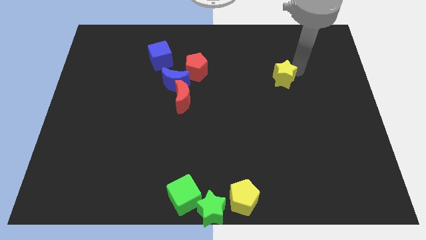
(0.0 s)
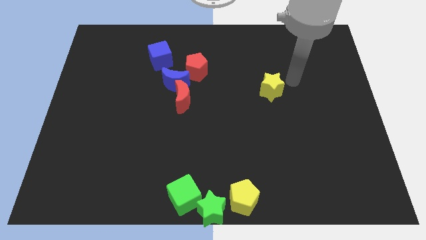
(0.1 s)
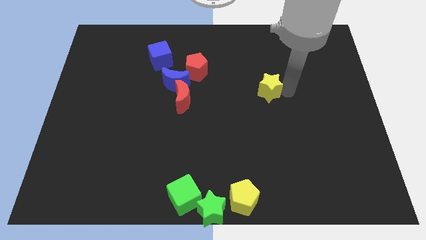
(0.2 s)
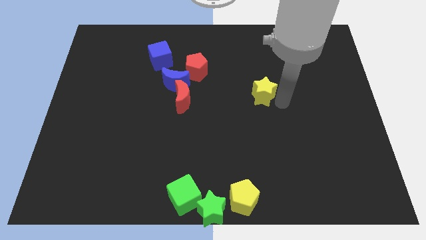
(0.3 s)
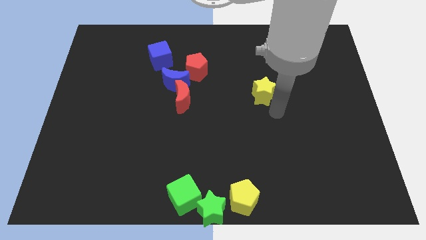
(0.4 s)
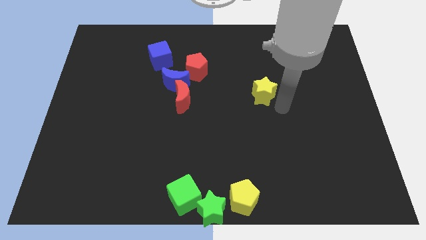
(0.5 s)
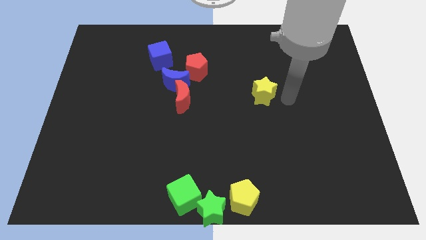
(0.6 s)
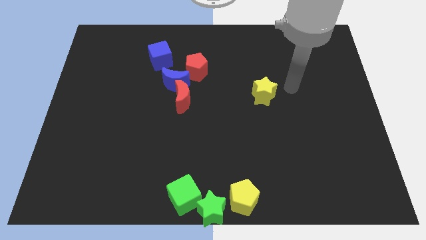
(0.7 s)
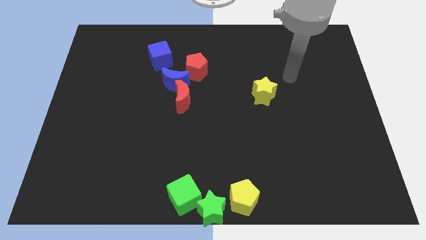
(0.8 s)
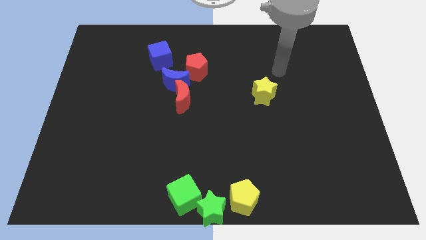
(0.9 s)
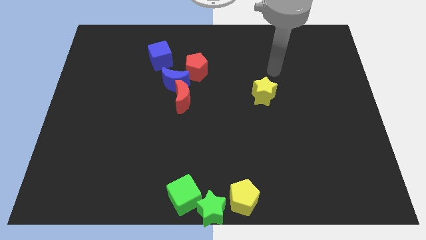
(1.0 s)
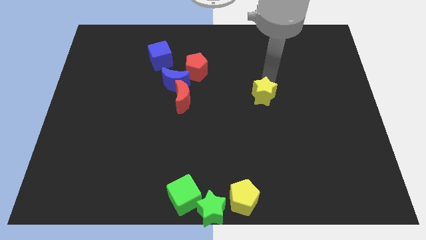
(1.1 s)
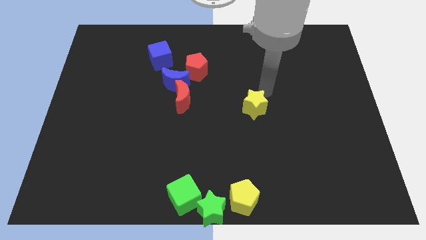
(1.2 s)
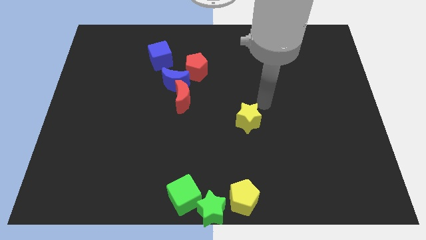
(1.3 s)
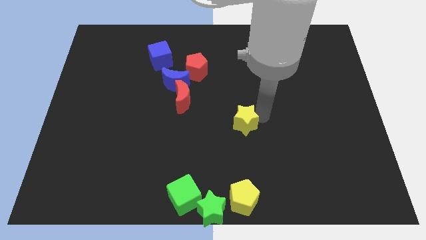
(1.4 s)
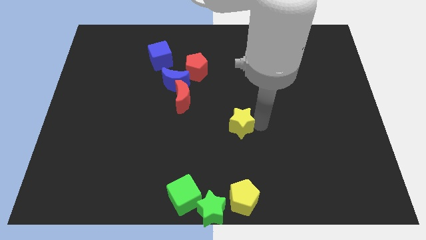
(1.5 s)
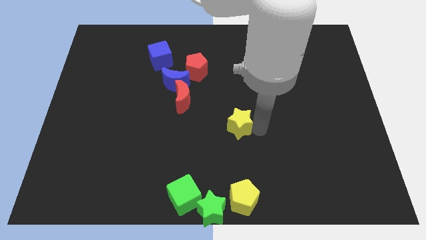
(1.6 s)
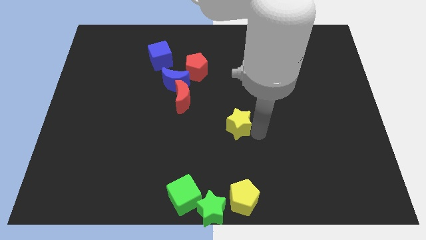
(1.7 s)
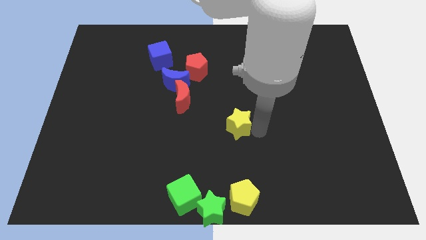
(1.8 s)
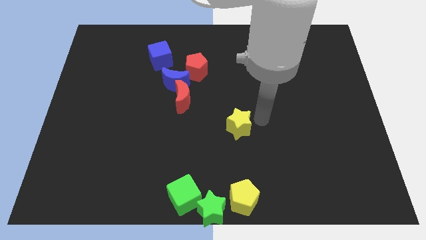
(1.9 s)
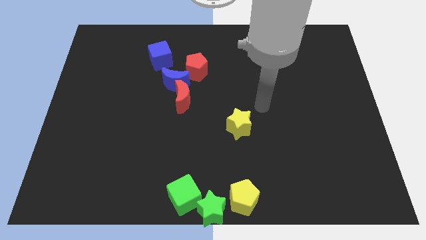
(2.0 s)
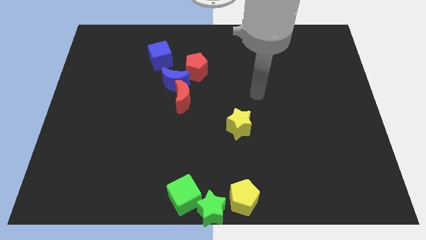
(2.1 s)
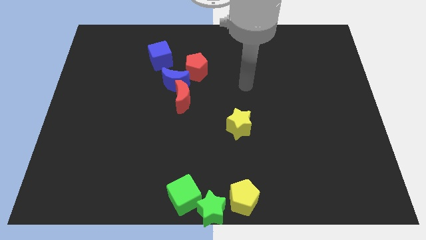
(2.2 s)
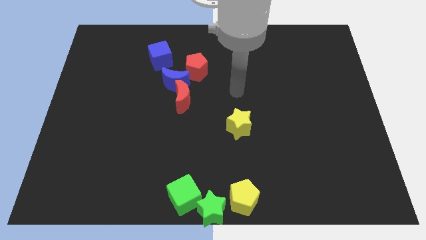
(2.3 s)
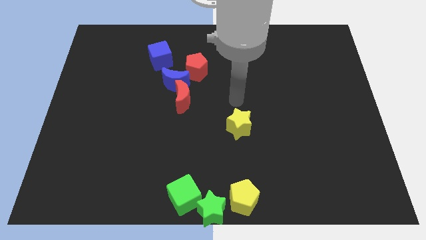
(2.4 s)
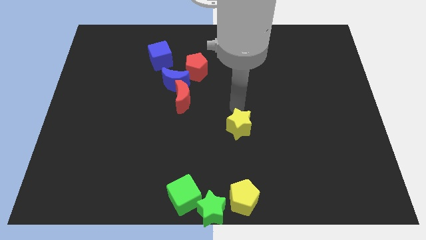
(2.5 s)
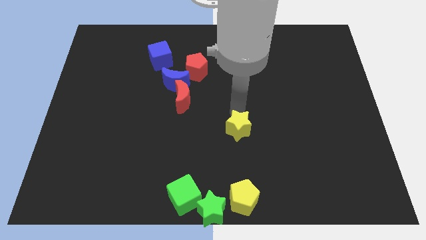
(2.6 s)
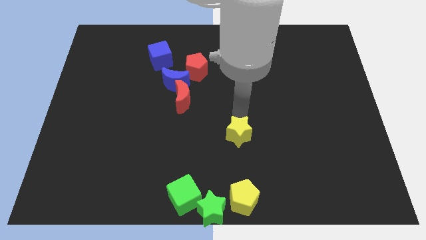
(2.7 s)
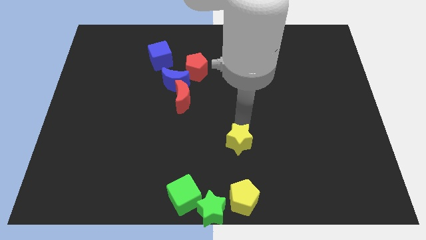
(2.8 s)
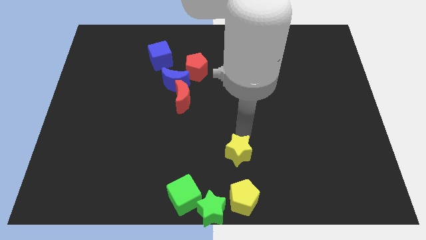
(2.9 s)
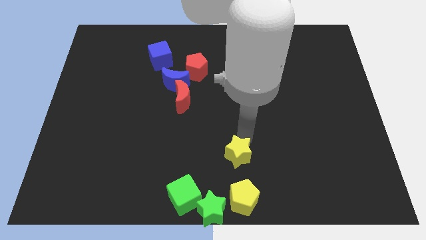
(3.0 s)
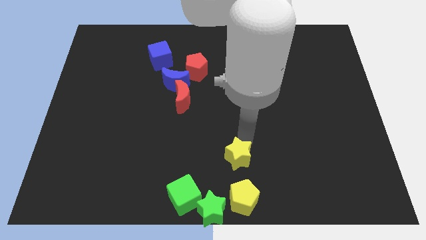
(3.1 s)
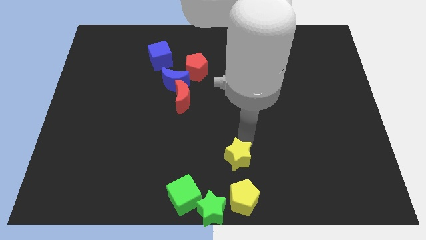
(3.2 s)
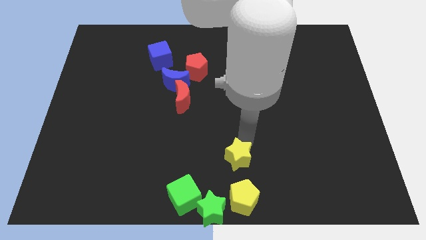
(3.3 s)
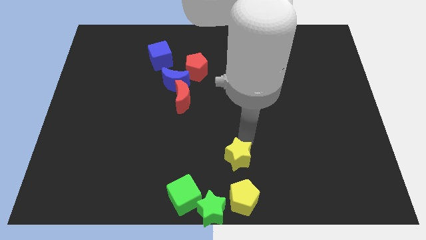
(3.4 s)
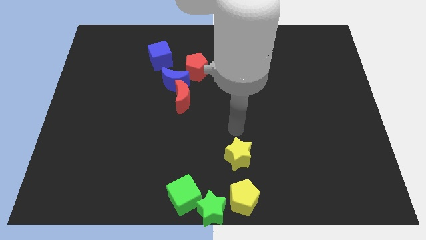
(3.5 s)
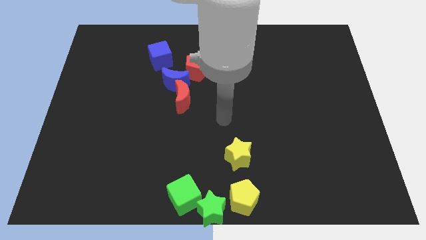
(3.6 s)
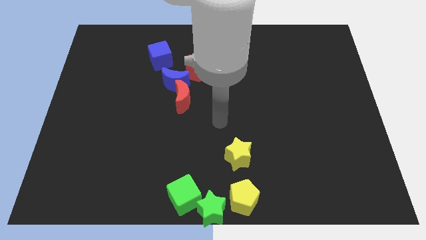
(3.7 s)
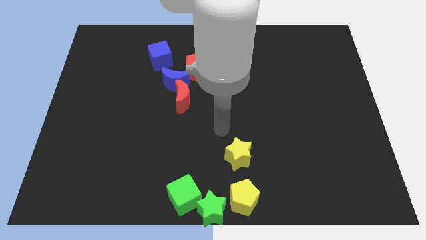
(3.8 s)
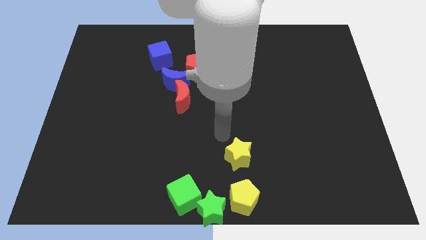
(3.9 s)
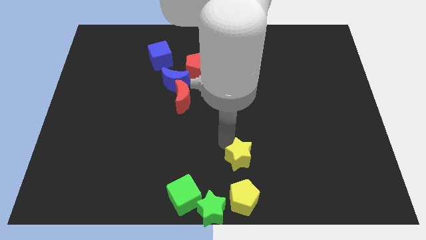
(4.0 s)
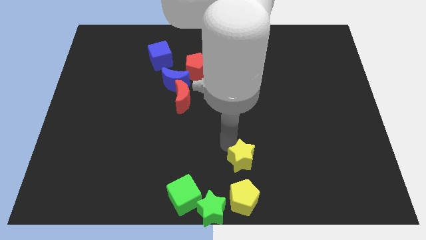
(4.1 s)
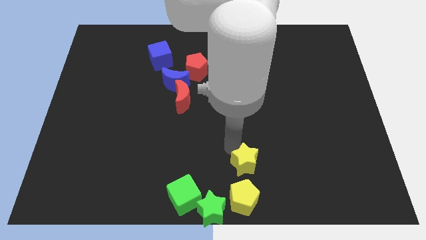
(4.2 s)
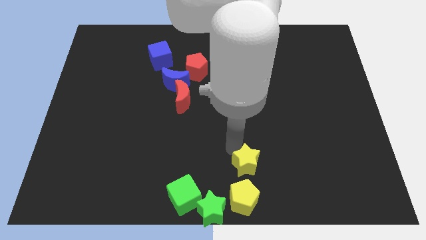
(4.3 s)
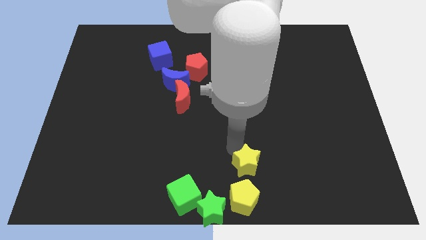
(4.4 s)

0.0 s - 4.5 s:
move the yellow star above the yellow pentagon

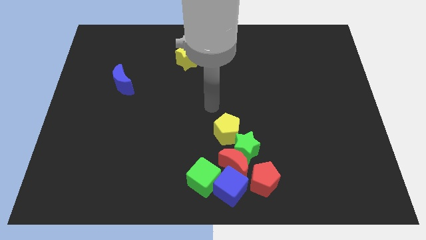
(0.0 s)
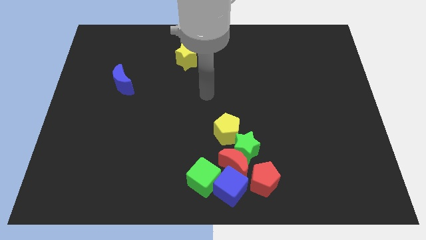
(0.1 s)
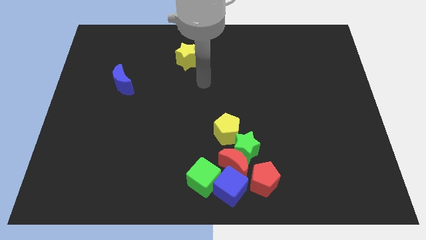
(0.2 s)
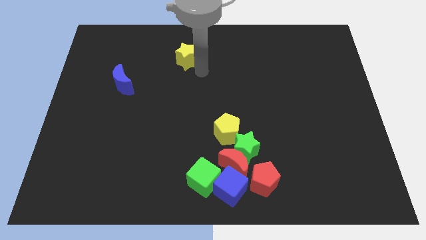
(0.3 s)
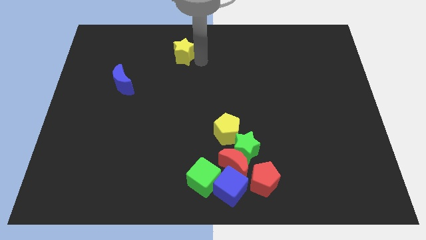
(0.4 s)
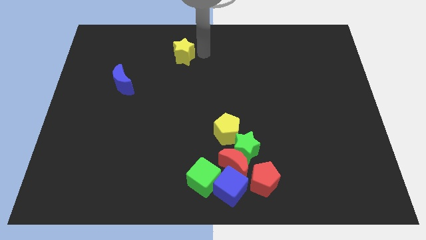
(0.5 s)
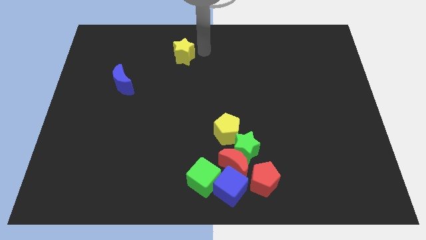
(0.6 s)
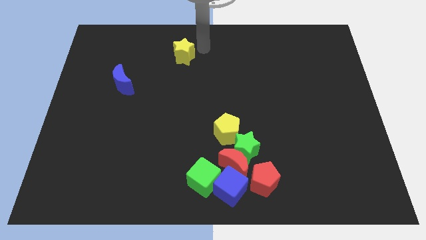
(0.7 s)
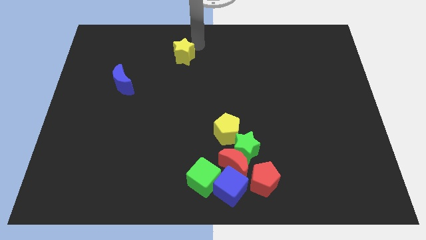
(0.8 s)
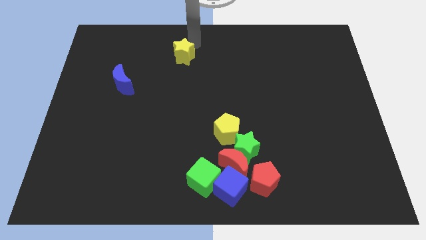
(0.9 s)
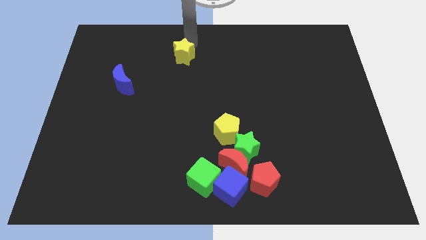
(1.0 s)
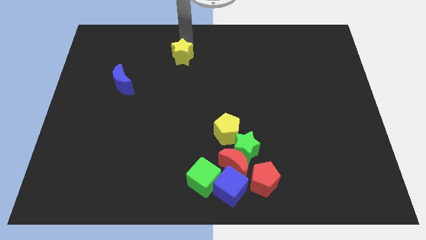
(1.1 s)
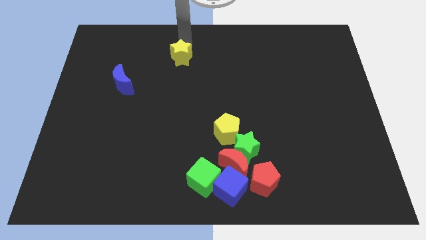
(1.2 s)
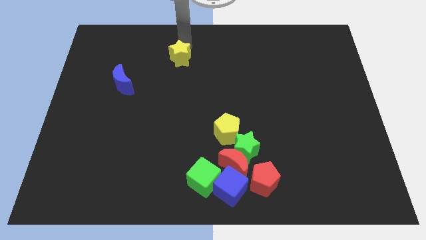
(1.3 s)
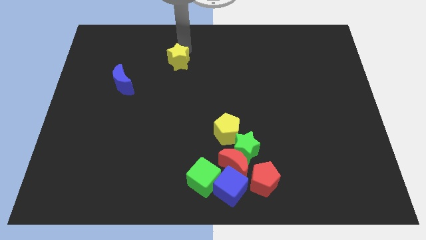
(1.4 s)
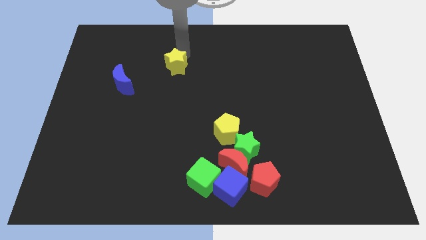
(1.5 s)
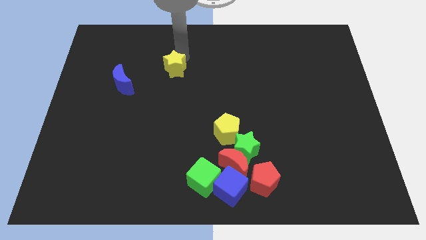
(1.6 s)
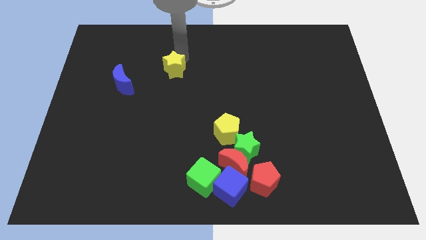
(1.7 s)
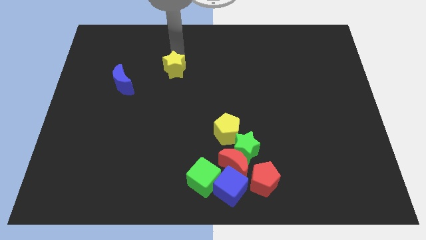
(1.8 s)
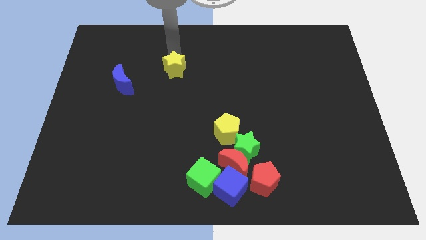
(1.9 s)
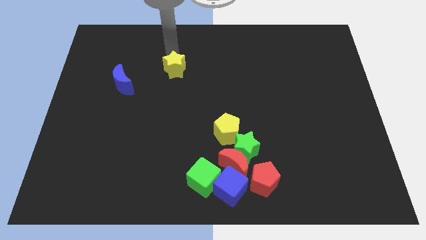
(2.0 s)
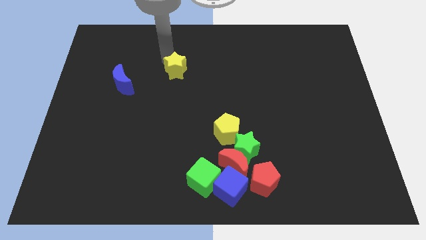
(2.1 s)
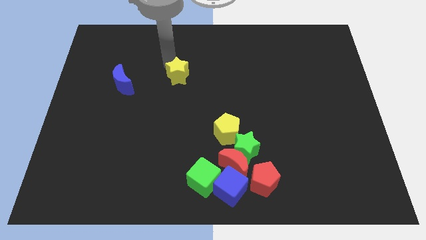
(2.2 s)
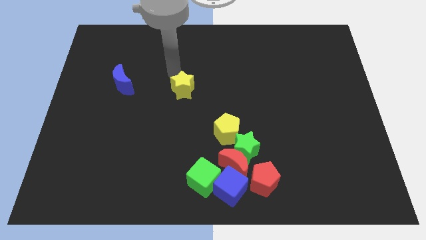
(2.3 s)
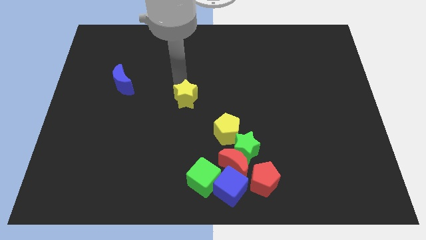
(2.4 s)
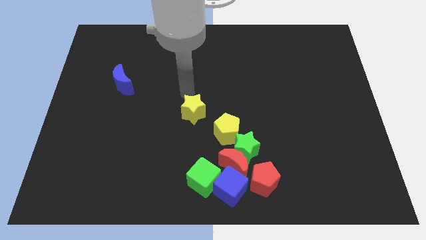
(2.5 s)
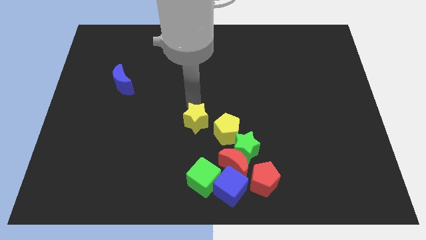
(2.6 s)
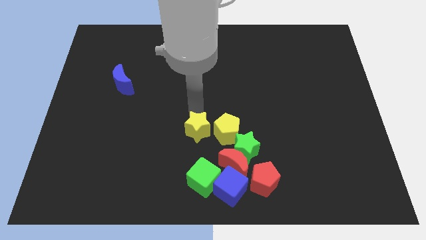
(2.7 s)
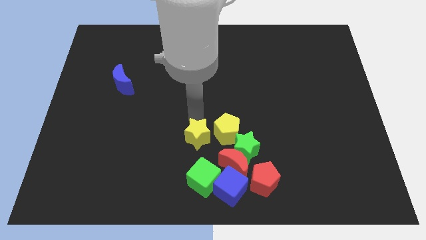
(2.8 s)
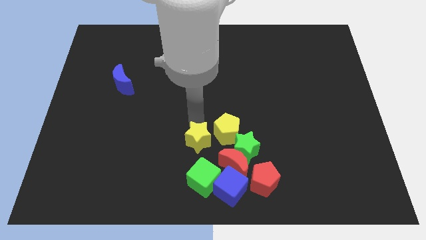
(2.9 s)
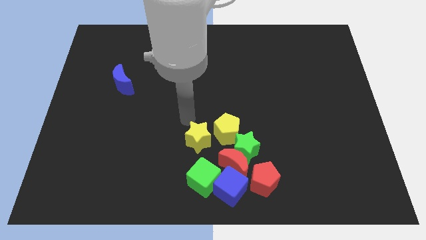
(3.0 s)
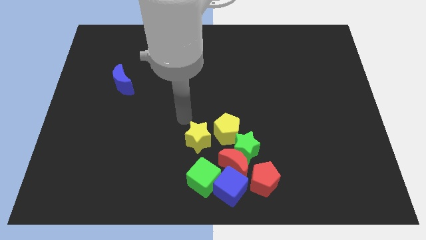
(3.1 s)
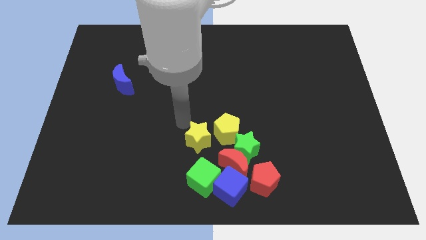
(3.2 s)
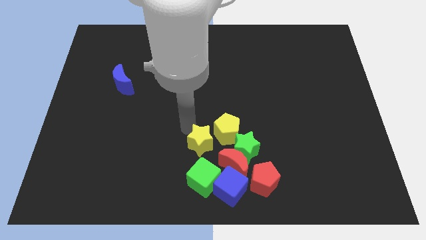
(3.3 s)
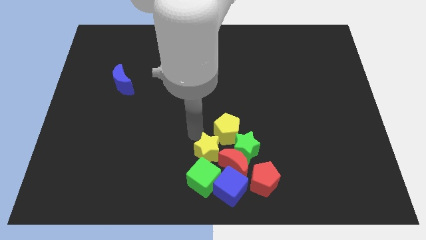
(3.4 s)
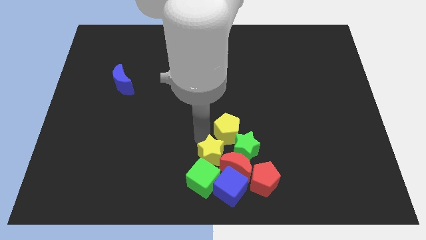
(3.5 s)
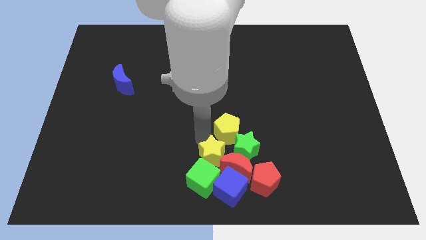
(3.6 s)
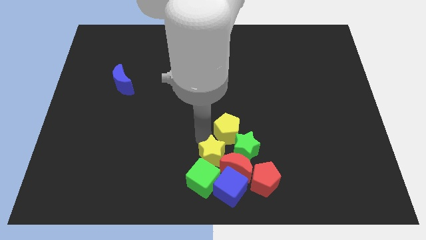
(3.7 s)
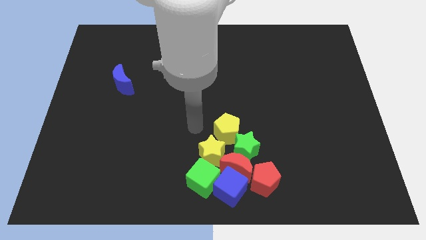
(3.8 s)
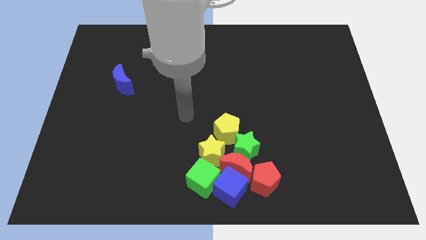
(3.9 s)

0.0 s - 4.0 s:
push the yellow star into red moon

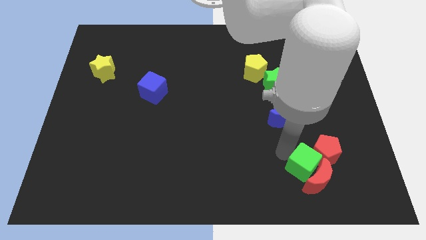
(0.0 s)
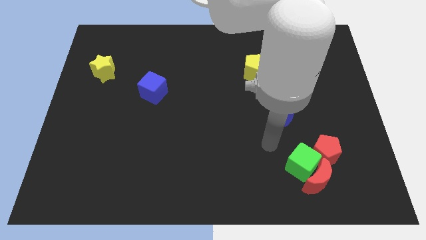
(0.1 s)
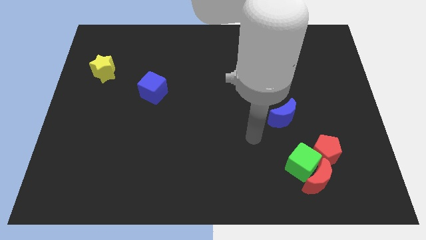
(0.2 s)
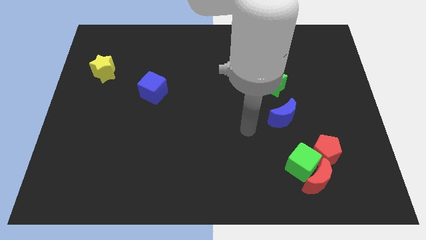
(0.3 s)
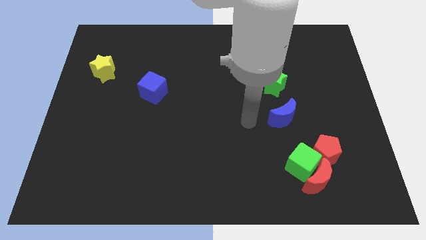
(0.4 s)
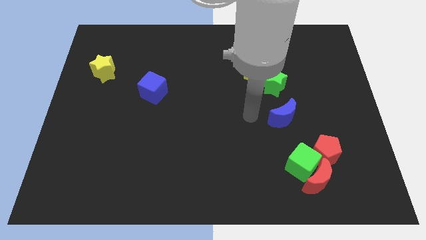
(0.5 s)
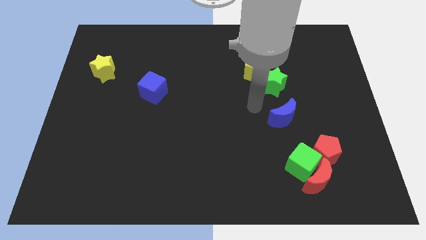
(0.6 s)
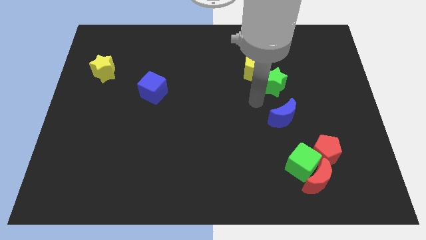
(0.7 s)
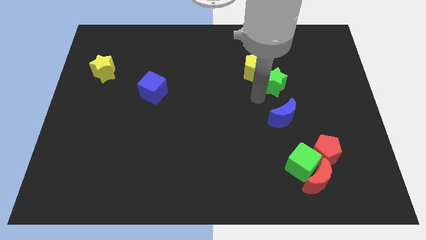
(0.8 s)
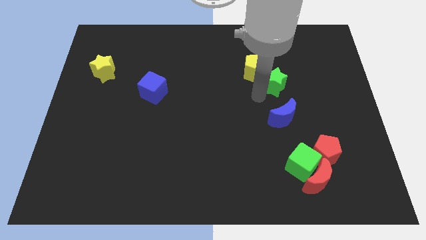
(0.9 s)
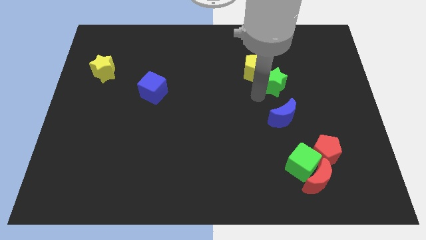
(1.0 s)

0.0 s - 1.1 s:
move the arm away from the green cube
